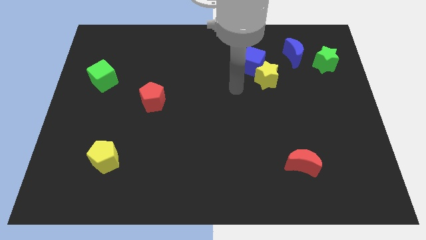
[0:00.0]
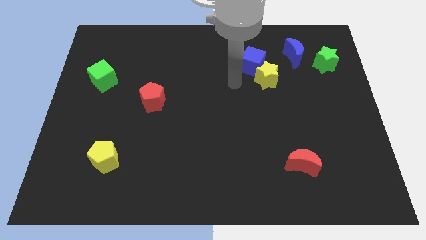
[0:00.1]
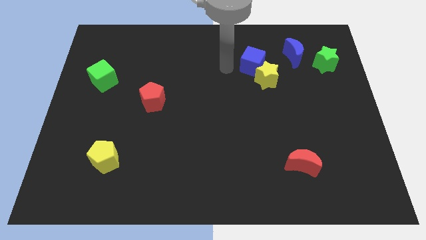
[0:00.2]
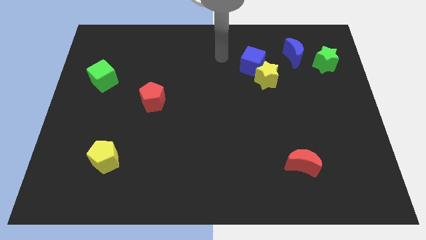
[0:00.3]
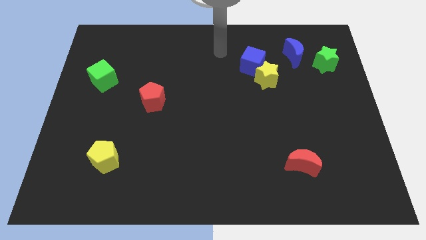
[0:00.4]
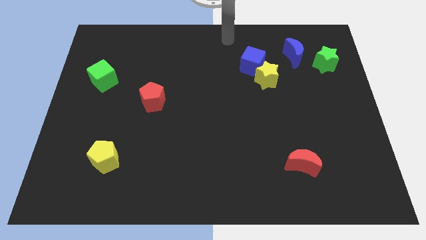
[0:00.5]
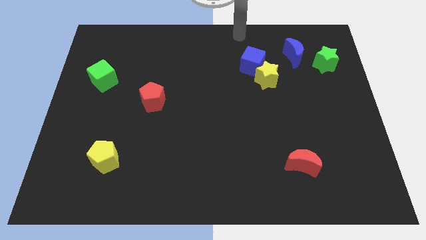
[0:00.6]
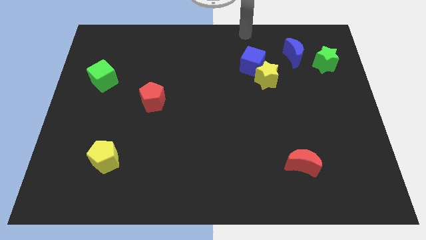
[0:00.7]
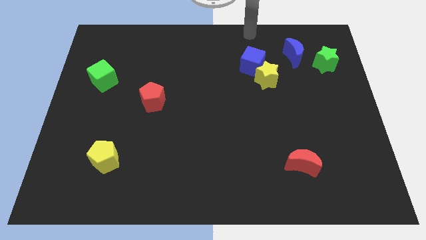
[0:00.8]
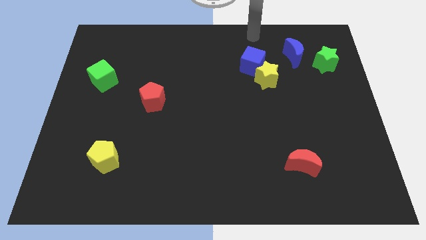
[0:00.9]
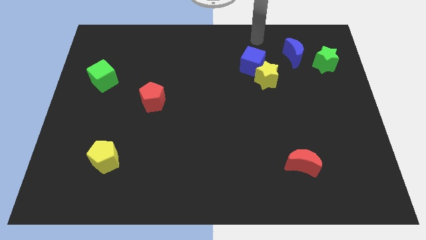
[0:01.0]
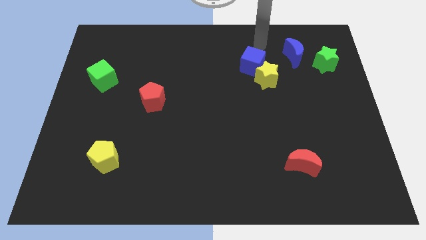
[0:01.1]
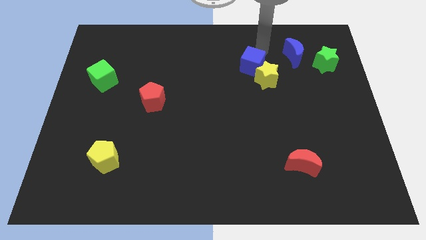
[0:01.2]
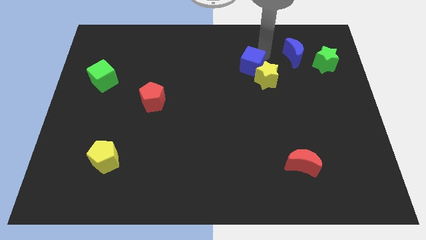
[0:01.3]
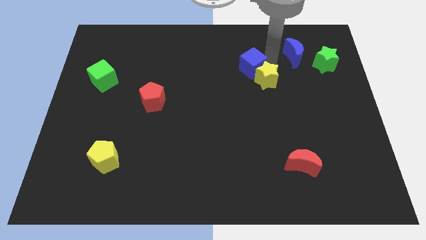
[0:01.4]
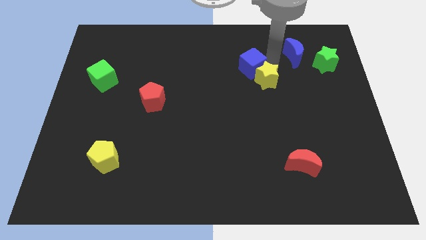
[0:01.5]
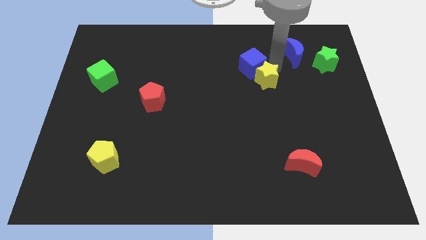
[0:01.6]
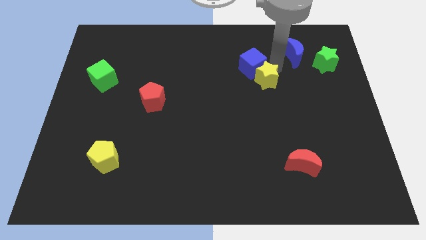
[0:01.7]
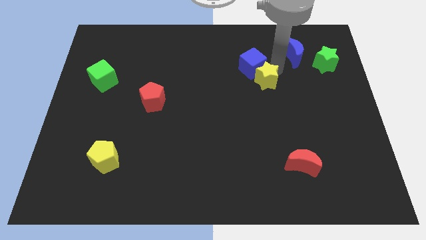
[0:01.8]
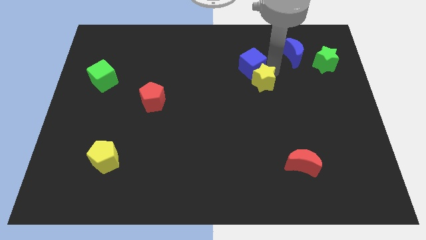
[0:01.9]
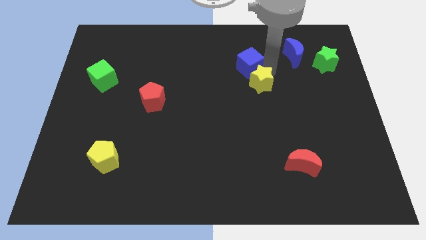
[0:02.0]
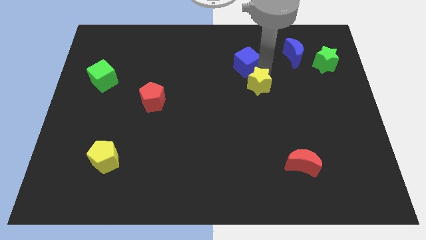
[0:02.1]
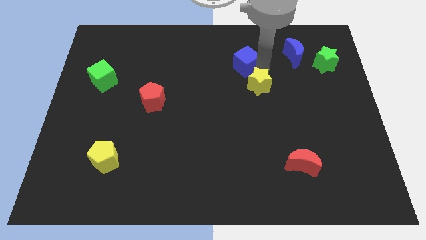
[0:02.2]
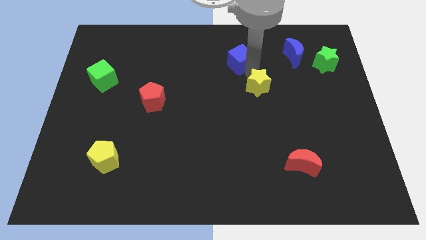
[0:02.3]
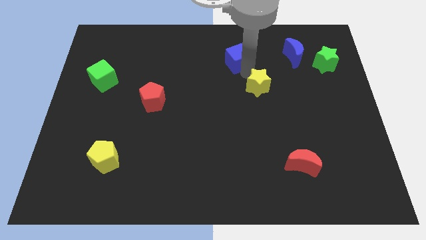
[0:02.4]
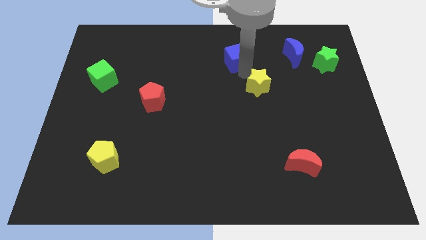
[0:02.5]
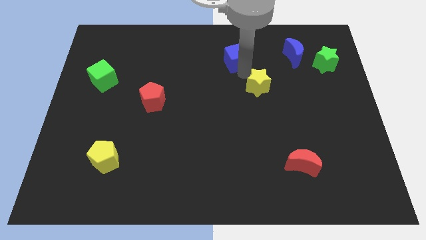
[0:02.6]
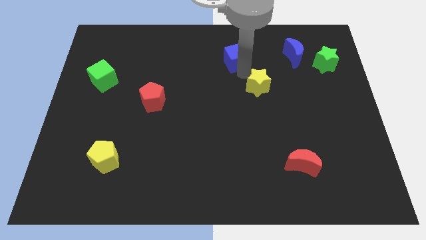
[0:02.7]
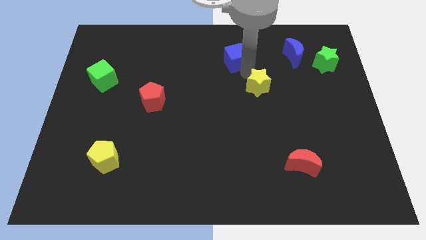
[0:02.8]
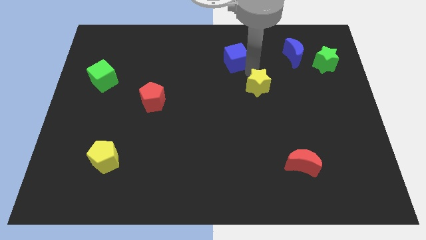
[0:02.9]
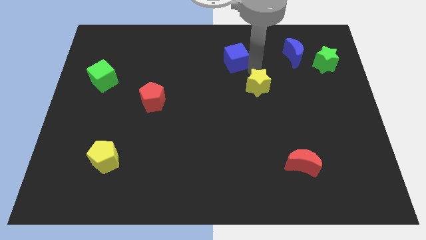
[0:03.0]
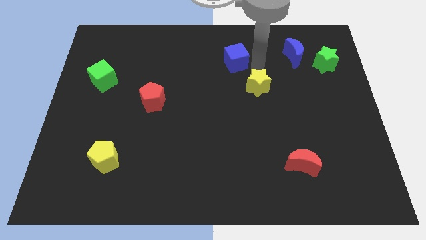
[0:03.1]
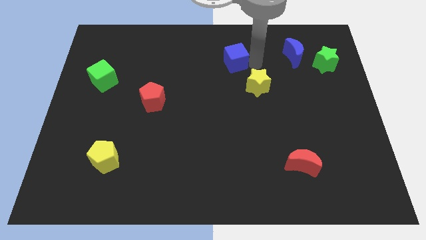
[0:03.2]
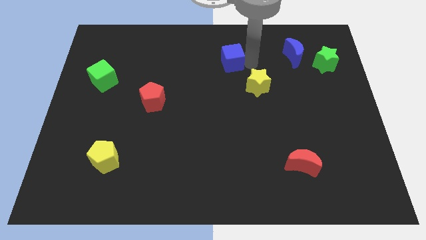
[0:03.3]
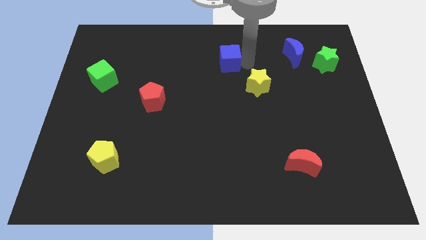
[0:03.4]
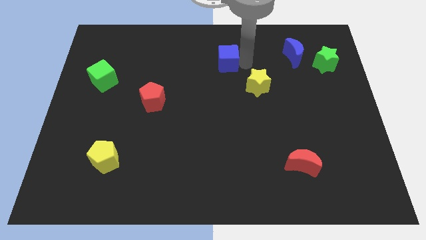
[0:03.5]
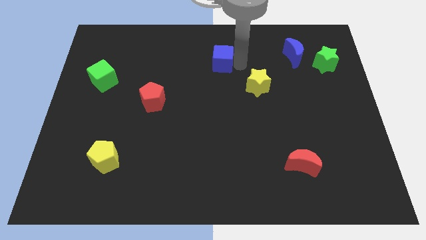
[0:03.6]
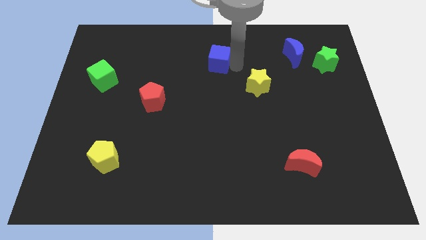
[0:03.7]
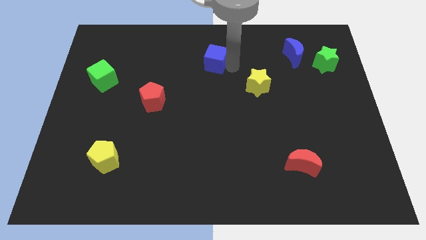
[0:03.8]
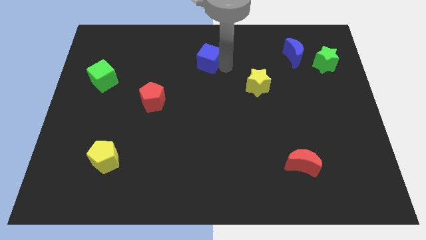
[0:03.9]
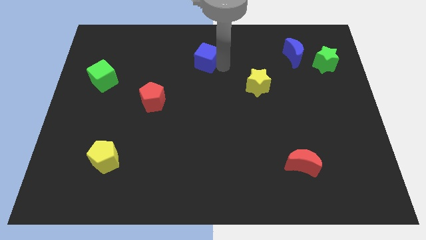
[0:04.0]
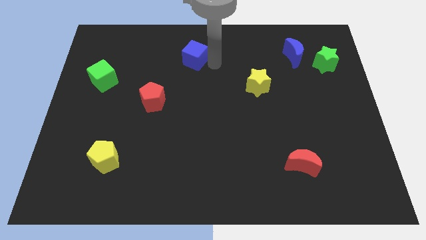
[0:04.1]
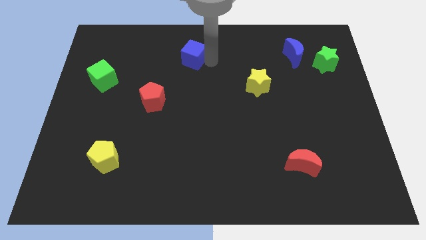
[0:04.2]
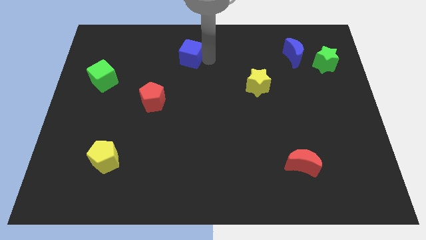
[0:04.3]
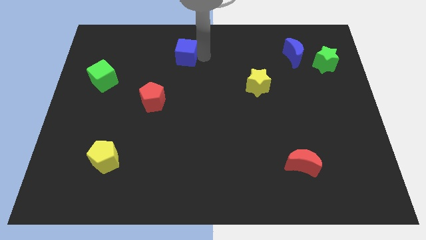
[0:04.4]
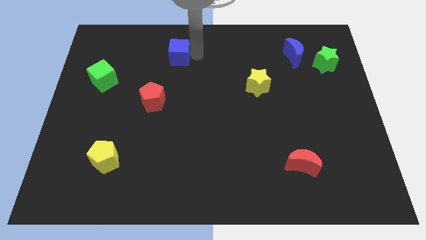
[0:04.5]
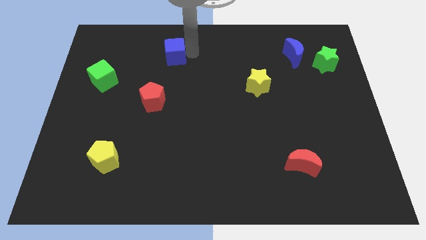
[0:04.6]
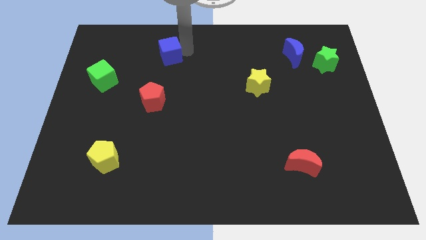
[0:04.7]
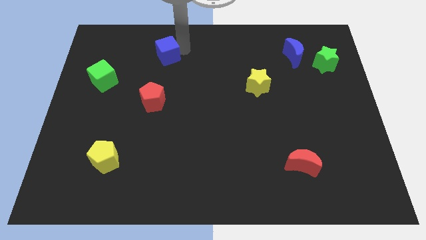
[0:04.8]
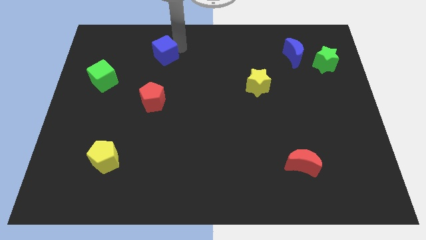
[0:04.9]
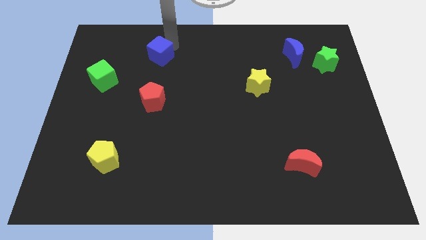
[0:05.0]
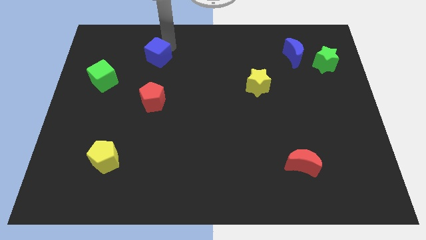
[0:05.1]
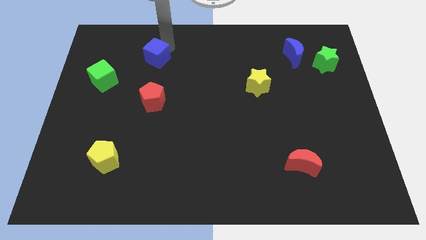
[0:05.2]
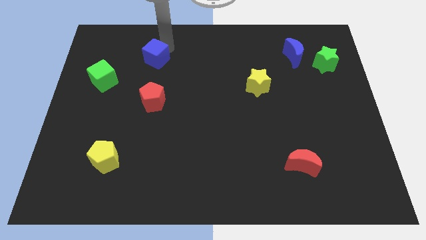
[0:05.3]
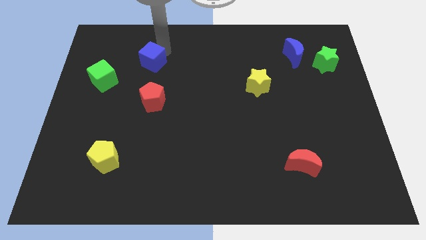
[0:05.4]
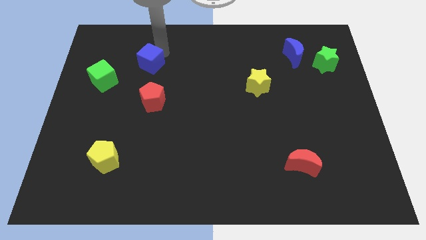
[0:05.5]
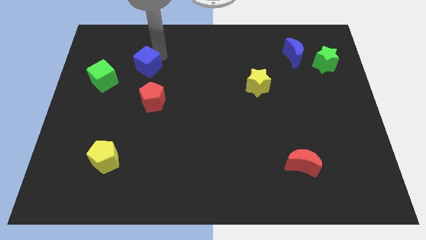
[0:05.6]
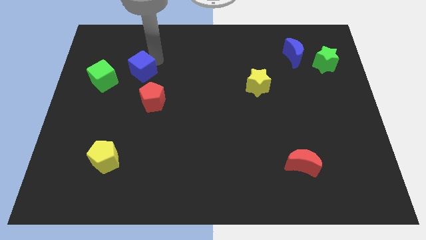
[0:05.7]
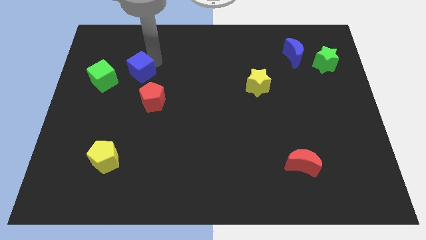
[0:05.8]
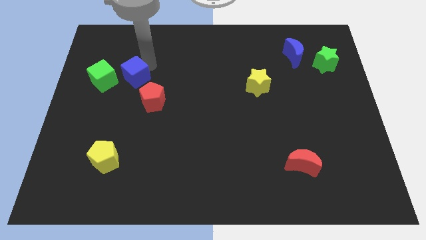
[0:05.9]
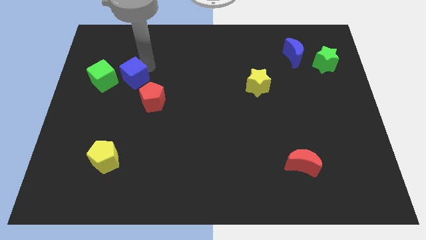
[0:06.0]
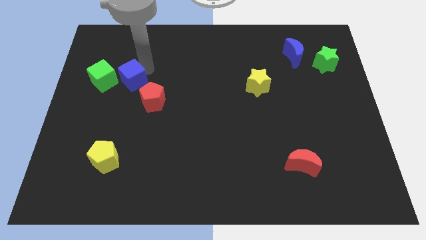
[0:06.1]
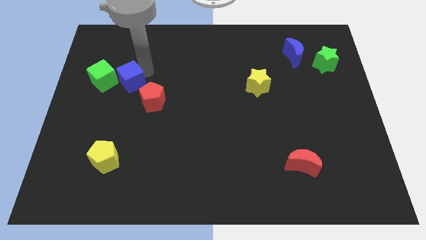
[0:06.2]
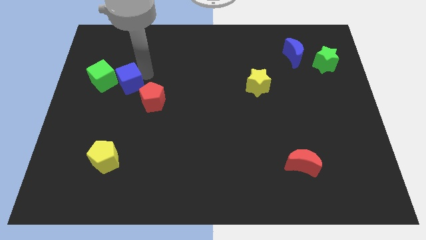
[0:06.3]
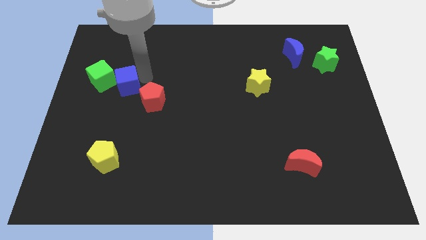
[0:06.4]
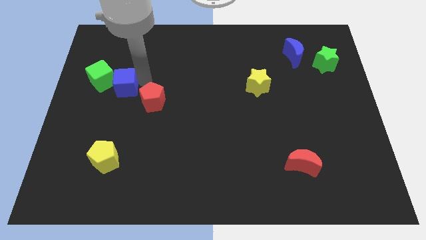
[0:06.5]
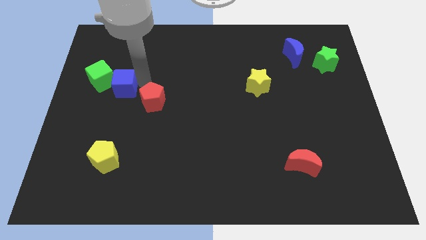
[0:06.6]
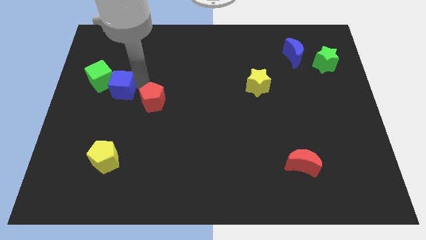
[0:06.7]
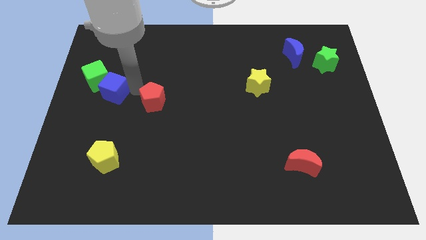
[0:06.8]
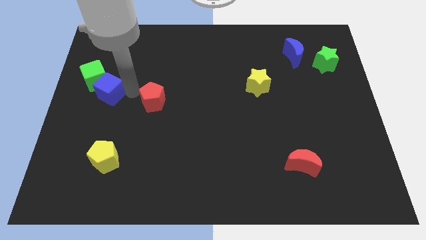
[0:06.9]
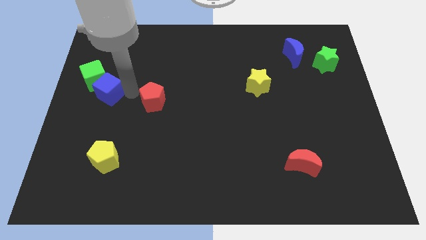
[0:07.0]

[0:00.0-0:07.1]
slide the blue cube to the green cube

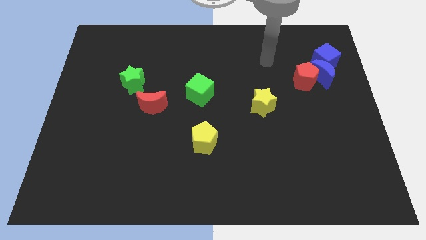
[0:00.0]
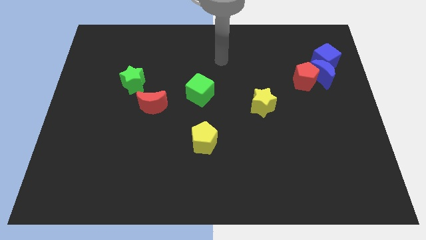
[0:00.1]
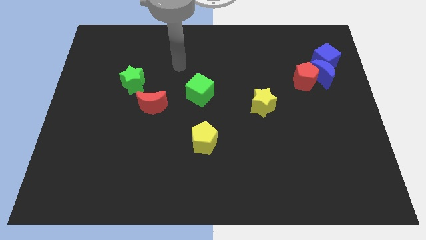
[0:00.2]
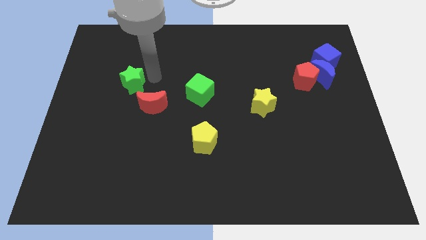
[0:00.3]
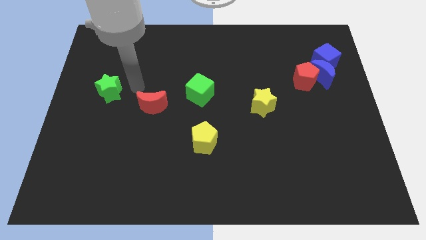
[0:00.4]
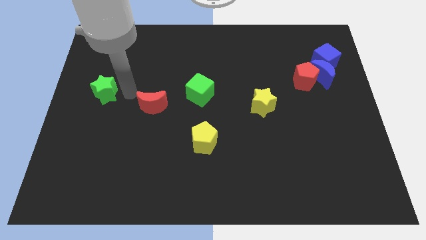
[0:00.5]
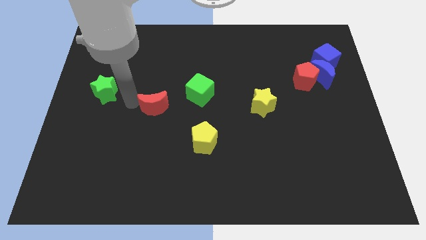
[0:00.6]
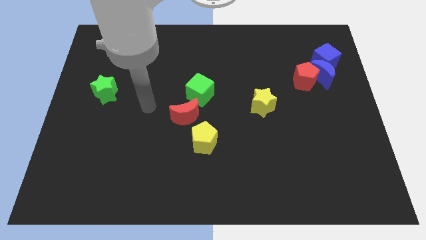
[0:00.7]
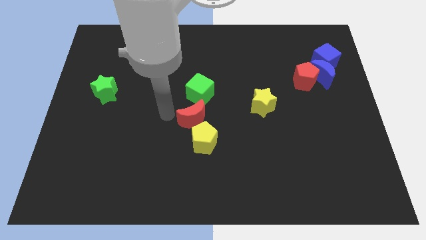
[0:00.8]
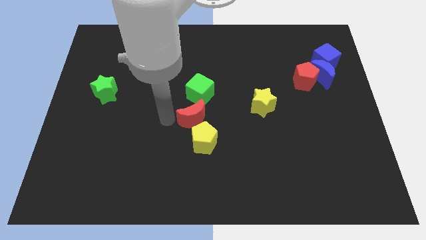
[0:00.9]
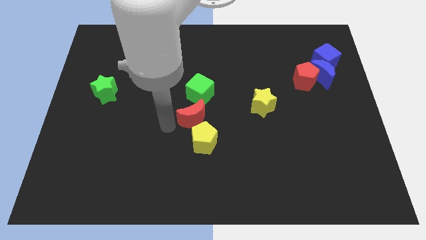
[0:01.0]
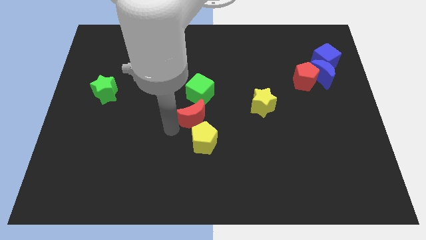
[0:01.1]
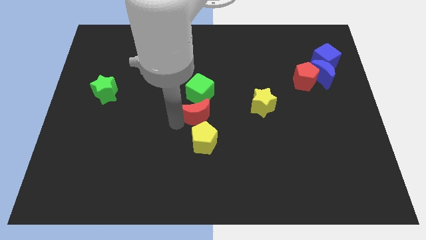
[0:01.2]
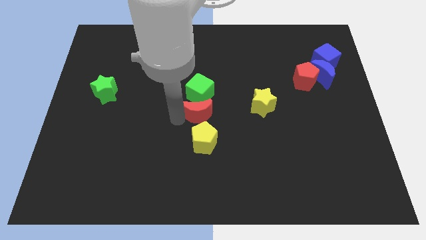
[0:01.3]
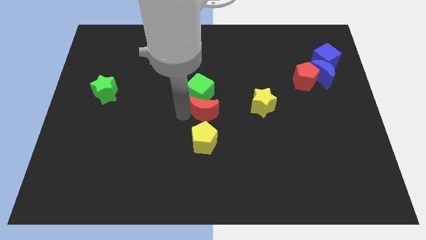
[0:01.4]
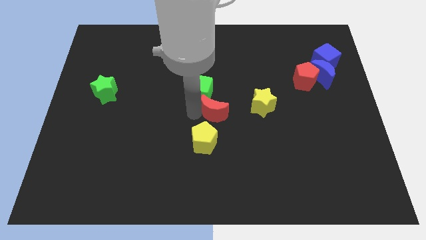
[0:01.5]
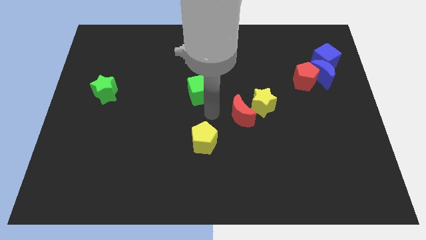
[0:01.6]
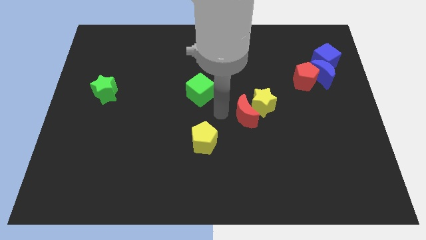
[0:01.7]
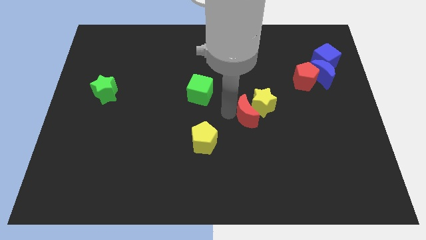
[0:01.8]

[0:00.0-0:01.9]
move the red moon close to the yellow star
